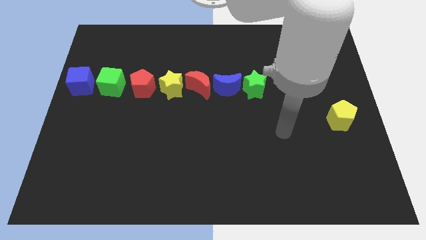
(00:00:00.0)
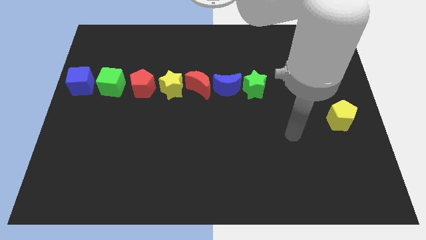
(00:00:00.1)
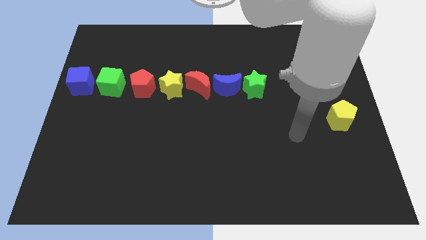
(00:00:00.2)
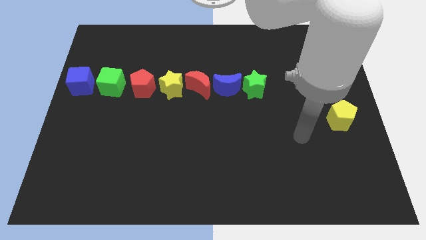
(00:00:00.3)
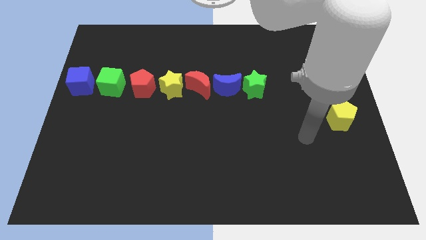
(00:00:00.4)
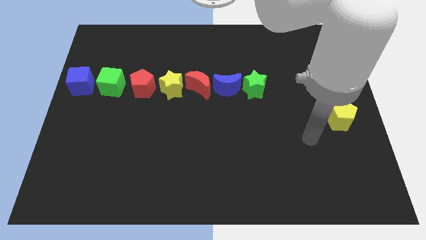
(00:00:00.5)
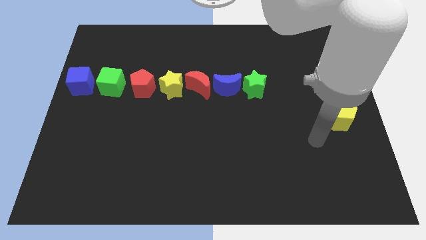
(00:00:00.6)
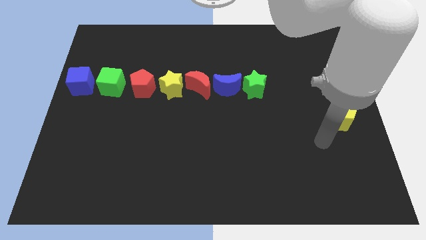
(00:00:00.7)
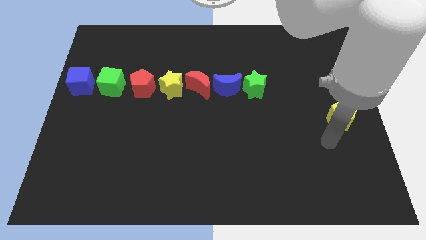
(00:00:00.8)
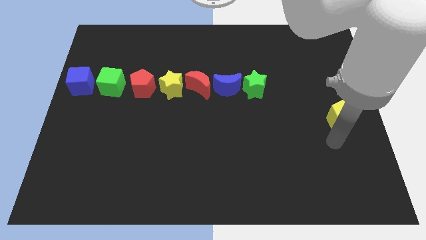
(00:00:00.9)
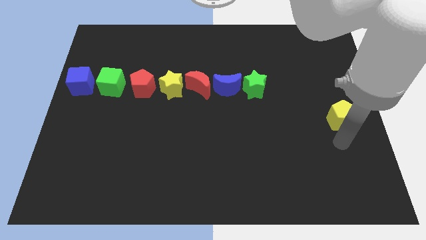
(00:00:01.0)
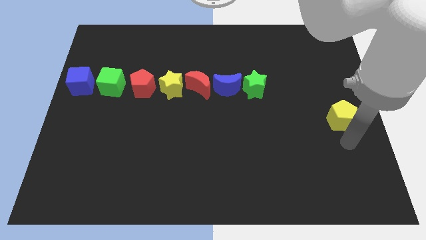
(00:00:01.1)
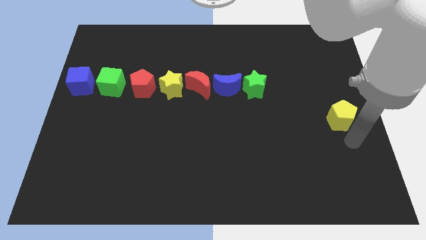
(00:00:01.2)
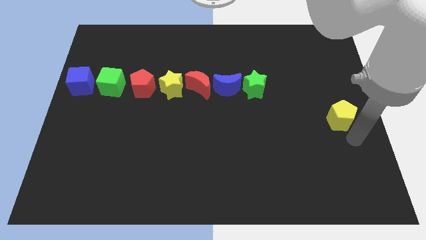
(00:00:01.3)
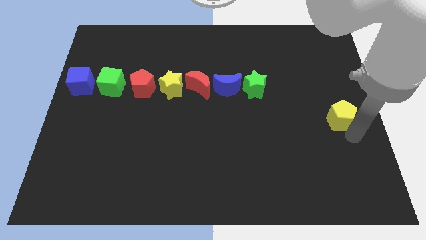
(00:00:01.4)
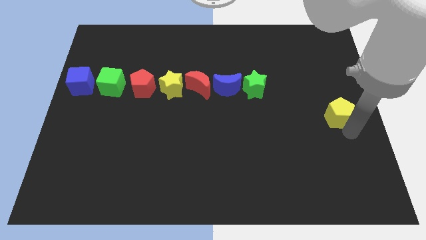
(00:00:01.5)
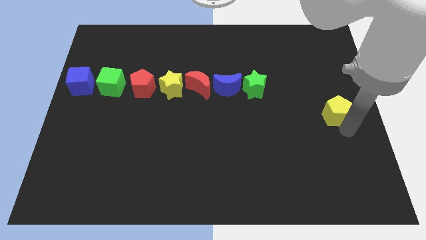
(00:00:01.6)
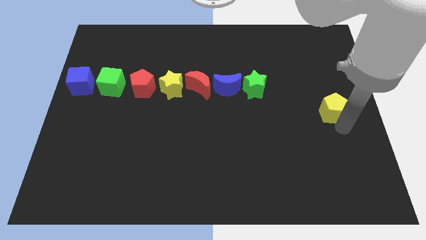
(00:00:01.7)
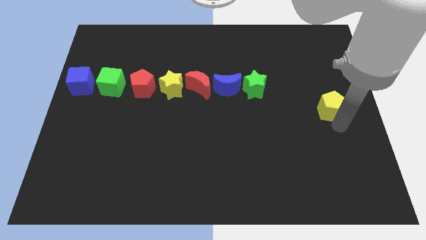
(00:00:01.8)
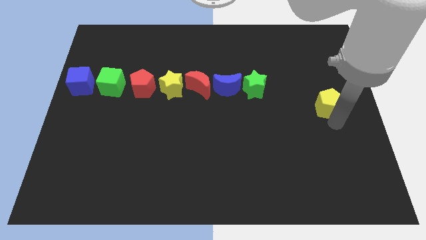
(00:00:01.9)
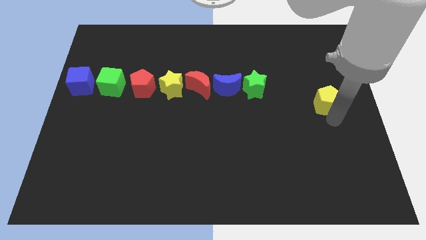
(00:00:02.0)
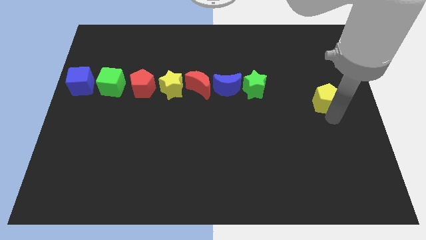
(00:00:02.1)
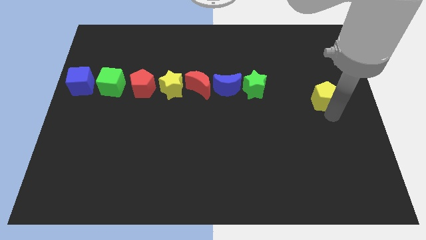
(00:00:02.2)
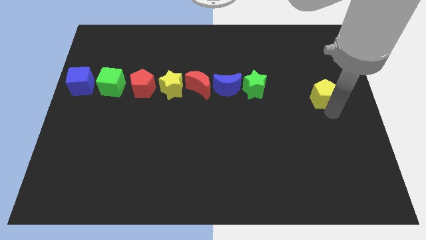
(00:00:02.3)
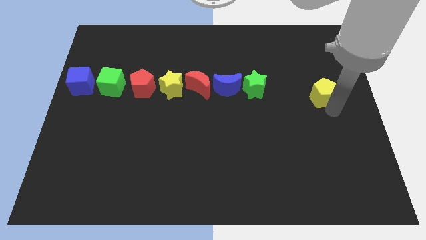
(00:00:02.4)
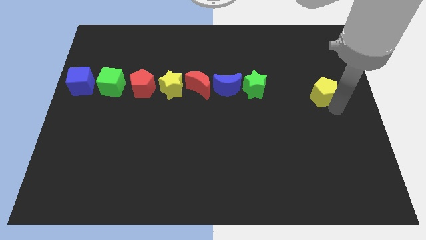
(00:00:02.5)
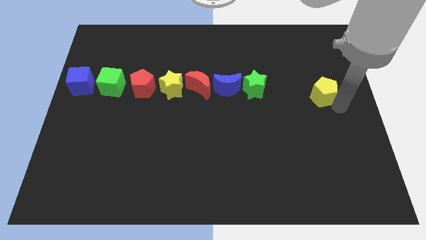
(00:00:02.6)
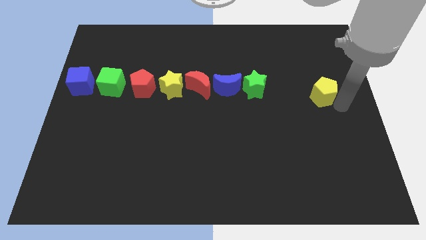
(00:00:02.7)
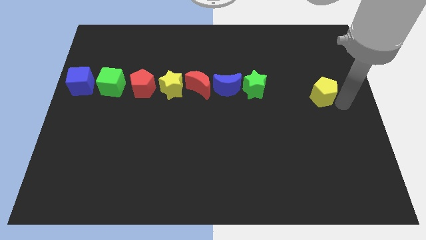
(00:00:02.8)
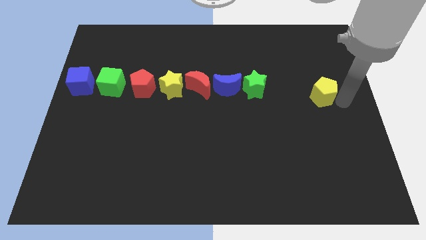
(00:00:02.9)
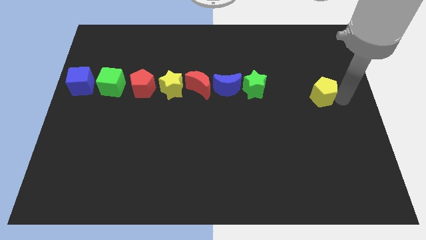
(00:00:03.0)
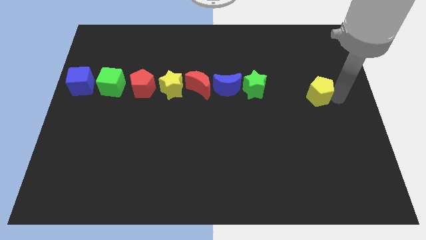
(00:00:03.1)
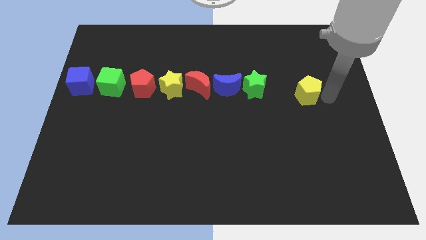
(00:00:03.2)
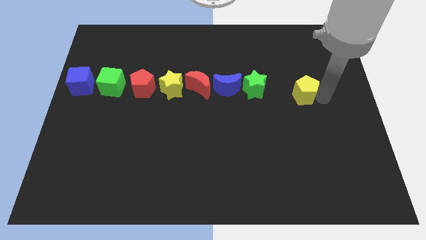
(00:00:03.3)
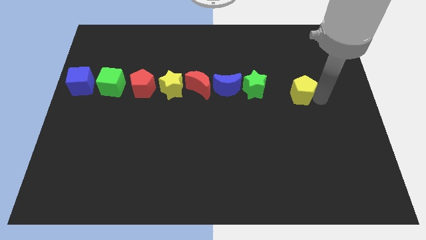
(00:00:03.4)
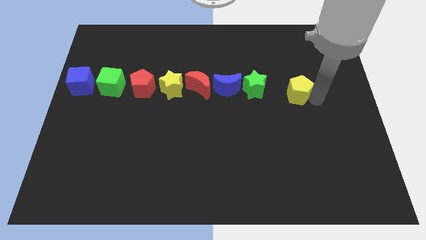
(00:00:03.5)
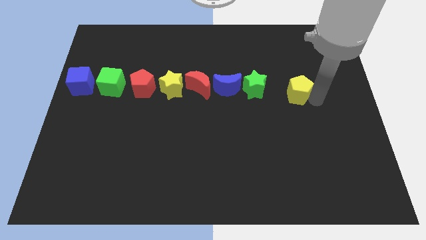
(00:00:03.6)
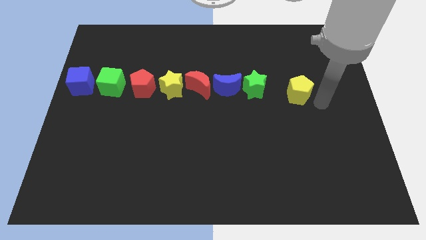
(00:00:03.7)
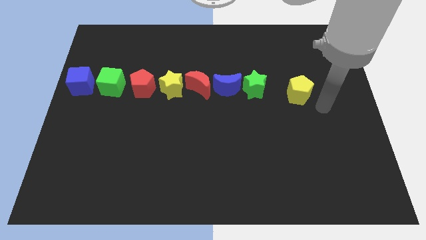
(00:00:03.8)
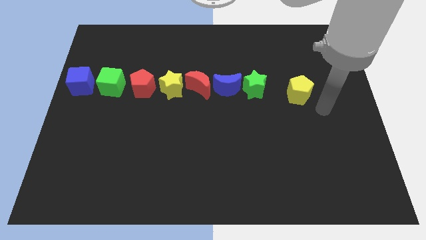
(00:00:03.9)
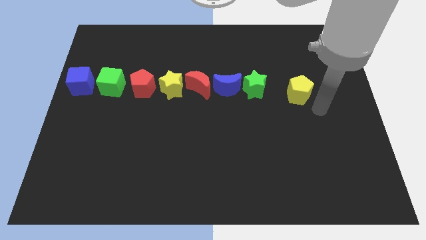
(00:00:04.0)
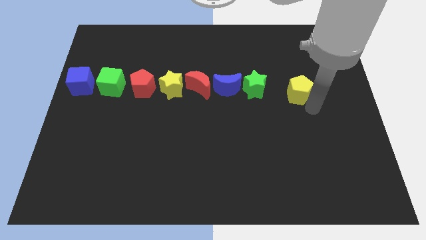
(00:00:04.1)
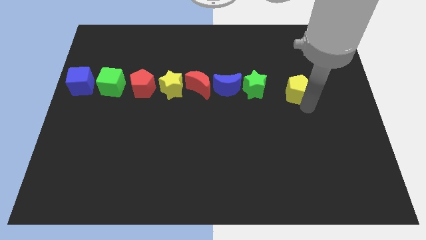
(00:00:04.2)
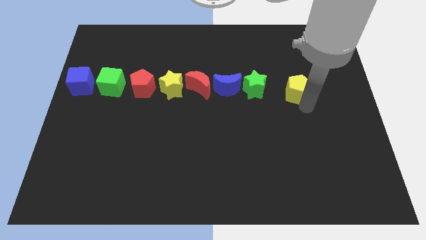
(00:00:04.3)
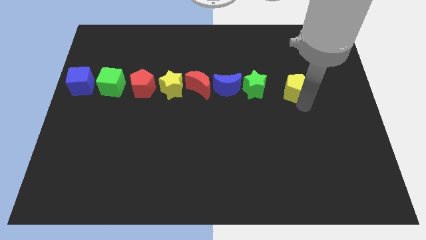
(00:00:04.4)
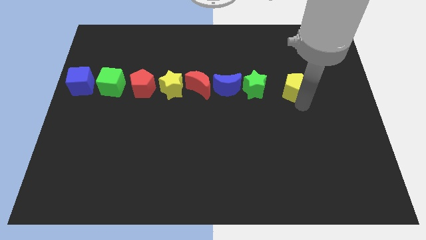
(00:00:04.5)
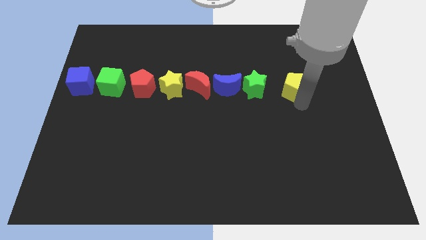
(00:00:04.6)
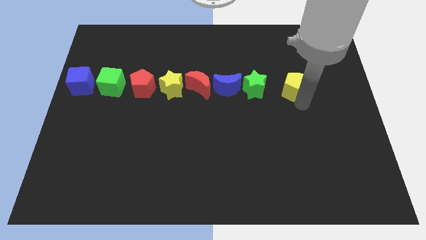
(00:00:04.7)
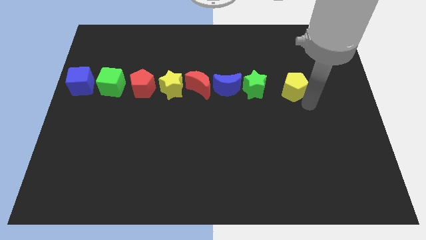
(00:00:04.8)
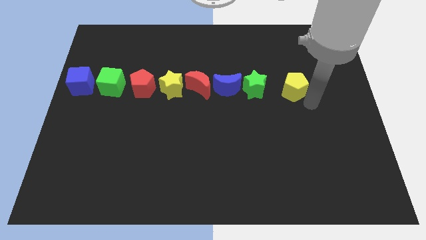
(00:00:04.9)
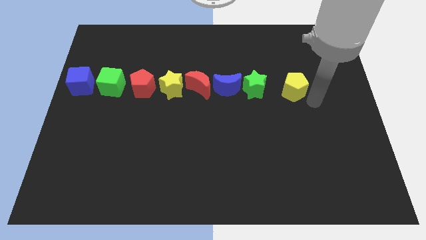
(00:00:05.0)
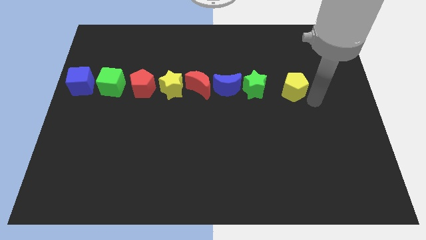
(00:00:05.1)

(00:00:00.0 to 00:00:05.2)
place the yellow pentagon right to the green star to form a horizontal line

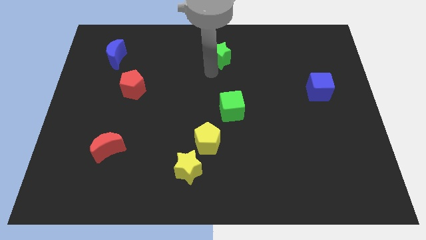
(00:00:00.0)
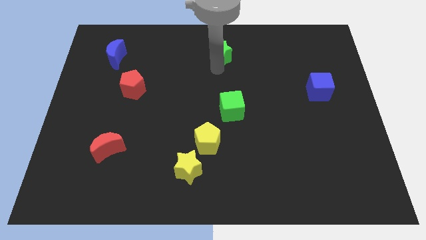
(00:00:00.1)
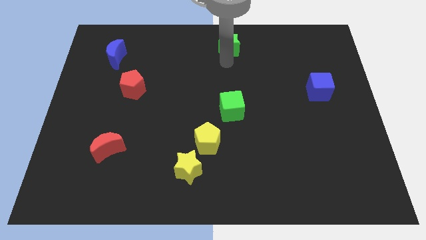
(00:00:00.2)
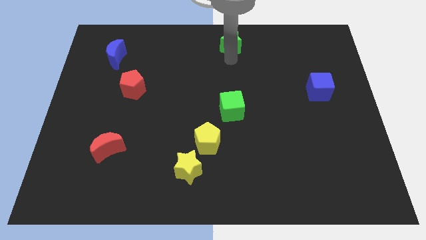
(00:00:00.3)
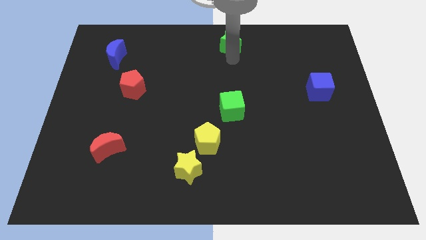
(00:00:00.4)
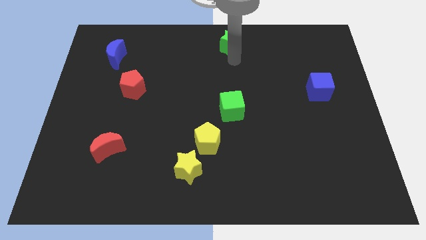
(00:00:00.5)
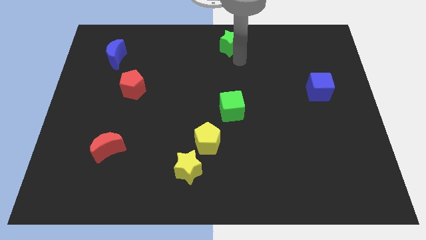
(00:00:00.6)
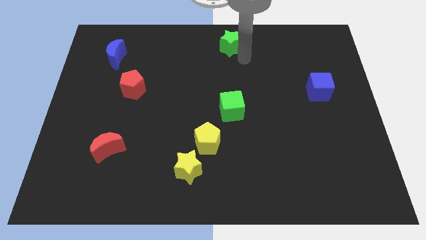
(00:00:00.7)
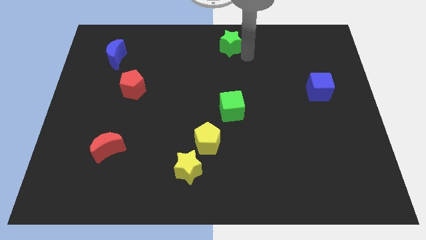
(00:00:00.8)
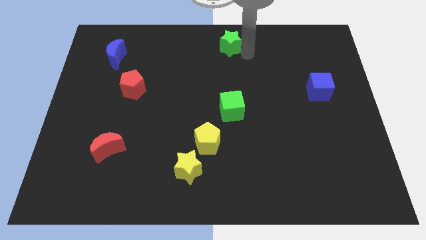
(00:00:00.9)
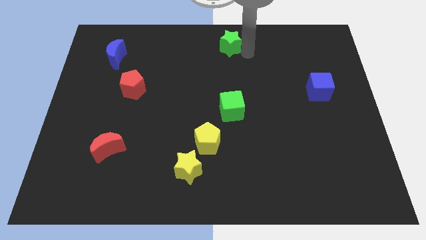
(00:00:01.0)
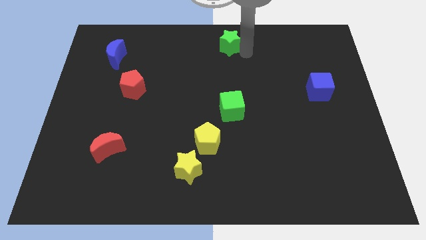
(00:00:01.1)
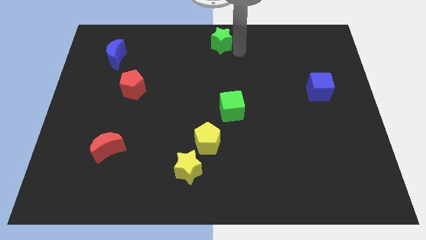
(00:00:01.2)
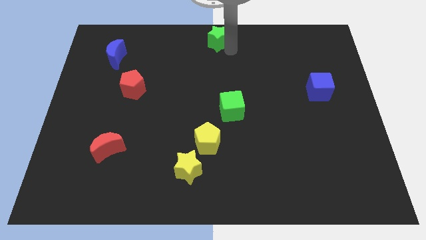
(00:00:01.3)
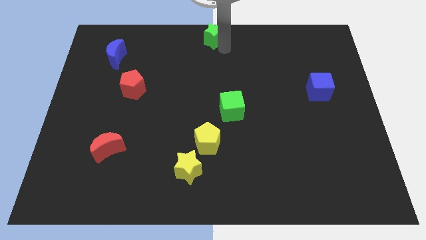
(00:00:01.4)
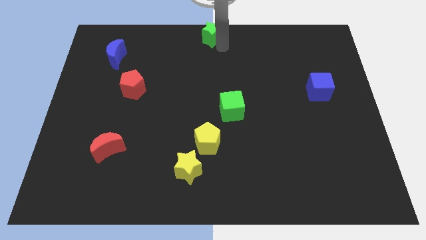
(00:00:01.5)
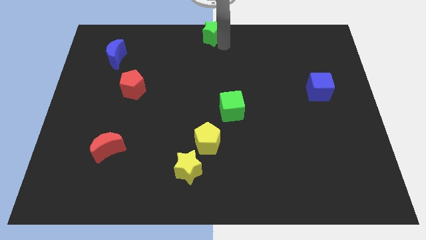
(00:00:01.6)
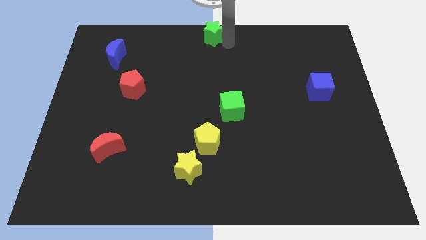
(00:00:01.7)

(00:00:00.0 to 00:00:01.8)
push the green star to the top center

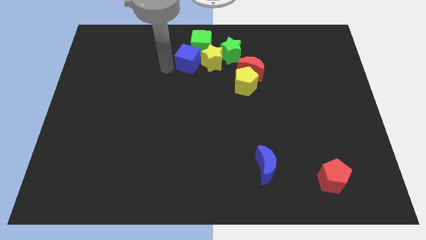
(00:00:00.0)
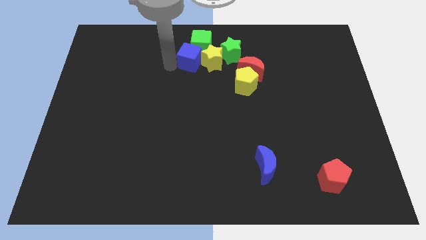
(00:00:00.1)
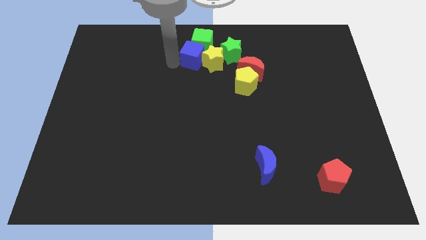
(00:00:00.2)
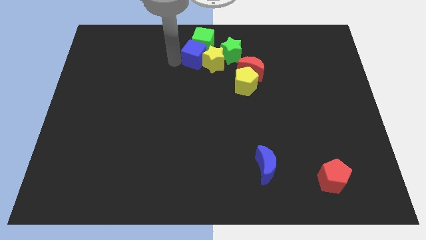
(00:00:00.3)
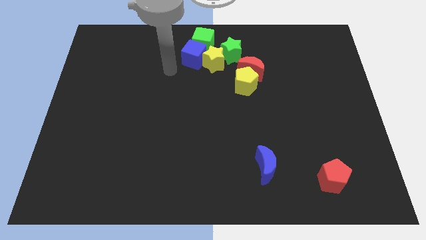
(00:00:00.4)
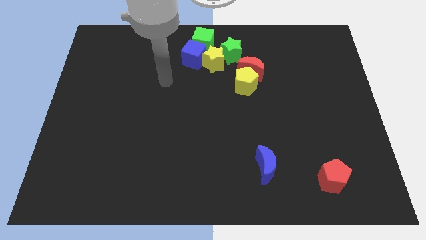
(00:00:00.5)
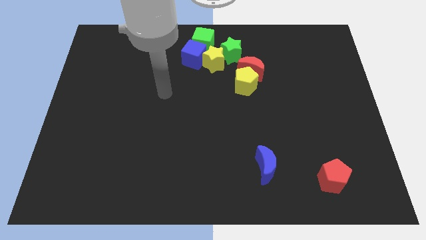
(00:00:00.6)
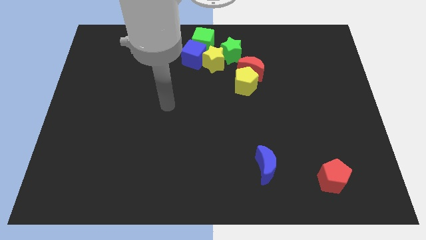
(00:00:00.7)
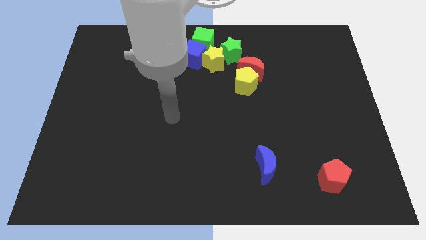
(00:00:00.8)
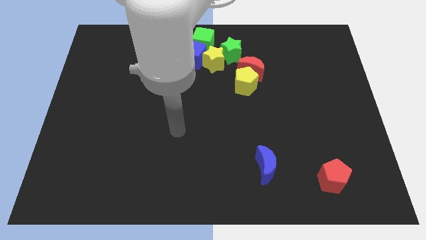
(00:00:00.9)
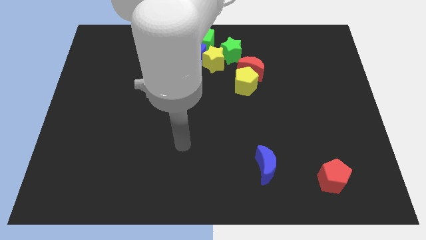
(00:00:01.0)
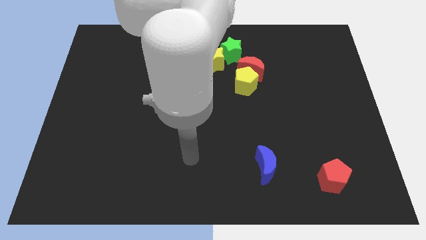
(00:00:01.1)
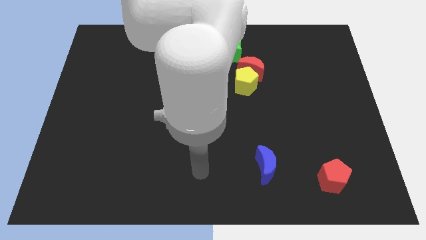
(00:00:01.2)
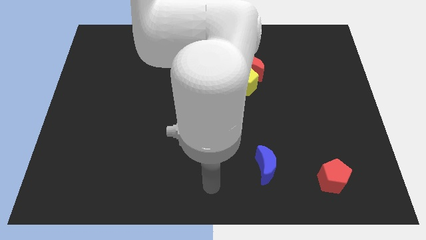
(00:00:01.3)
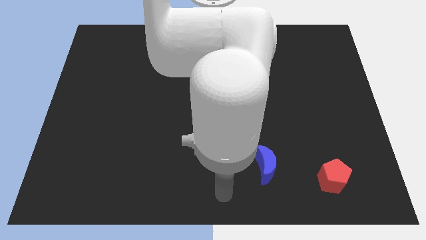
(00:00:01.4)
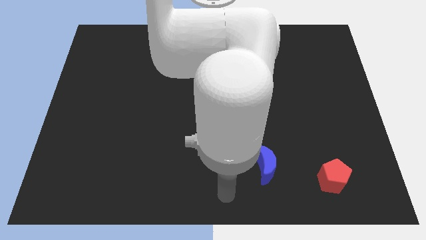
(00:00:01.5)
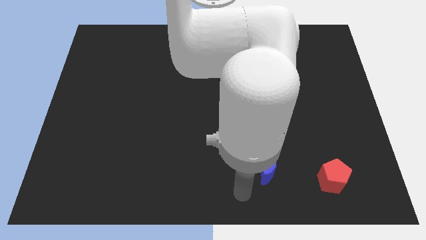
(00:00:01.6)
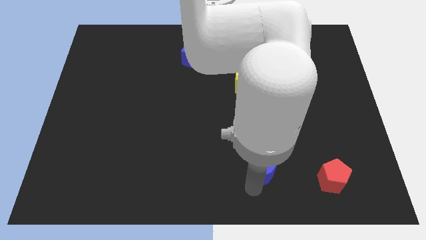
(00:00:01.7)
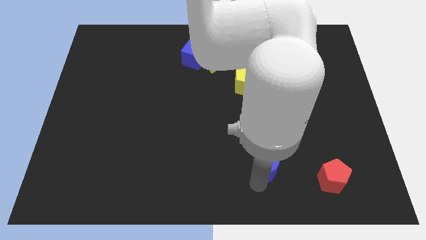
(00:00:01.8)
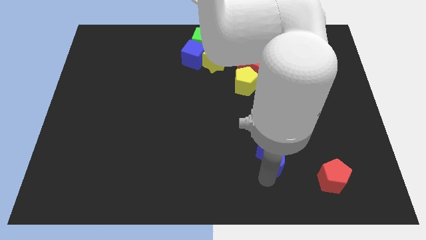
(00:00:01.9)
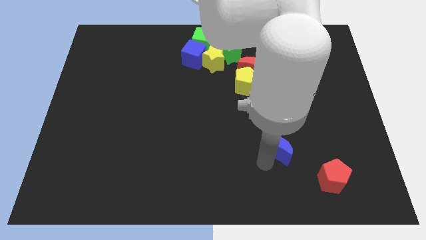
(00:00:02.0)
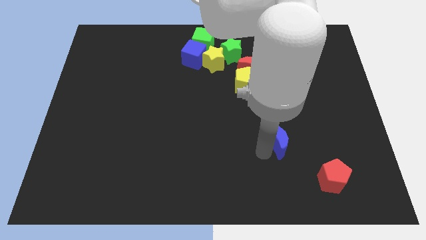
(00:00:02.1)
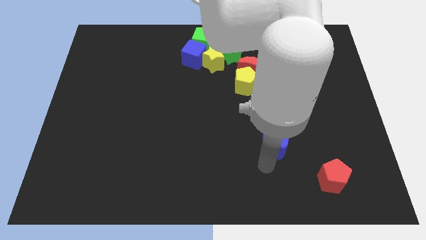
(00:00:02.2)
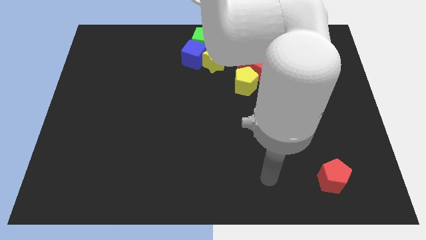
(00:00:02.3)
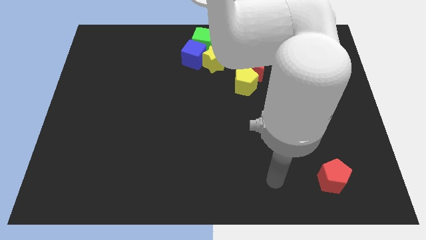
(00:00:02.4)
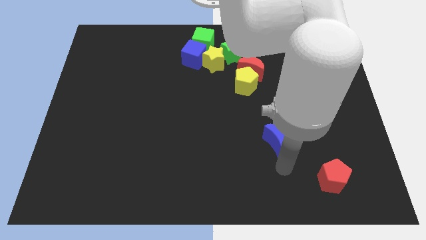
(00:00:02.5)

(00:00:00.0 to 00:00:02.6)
place the blue moon diagonally to the red pentagon
